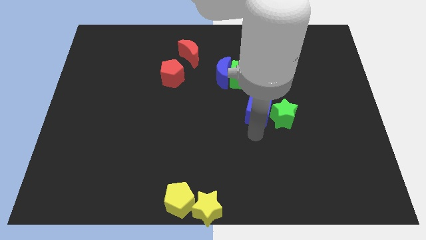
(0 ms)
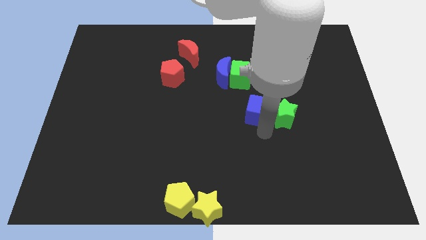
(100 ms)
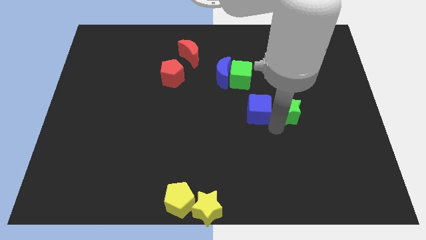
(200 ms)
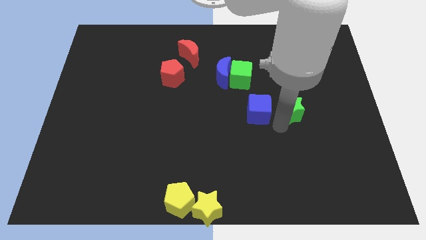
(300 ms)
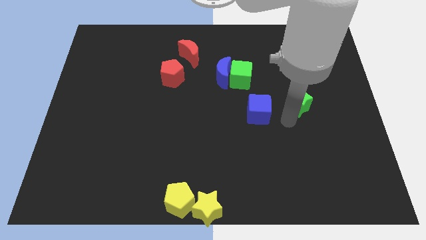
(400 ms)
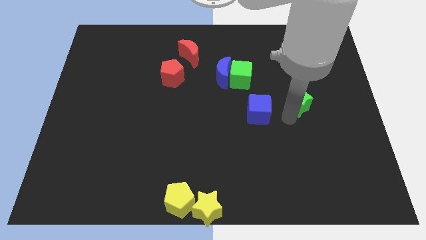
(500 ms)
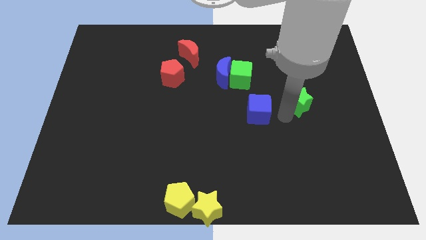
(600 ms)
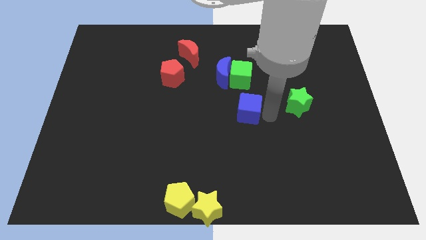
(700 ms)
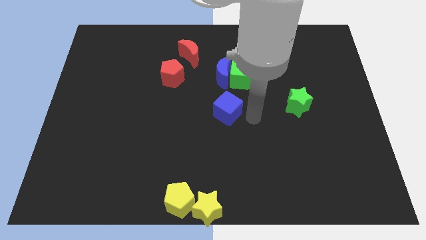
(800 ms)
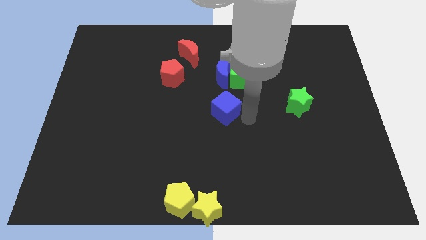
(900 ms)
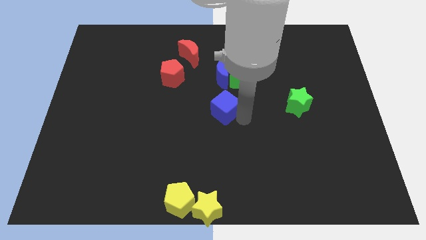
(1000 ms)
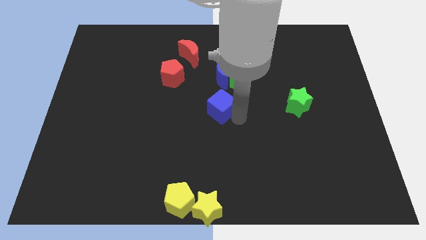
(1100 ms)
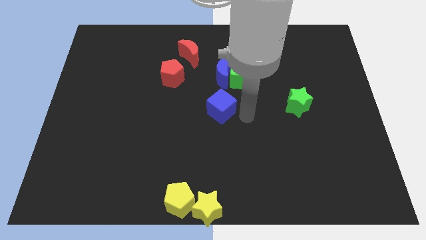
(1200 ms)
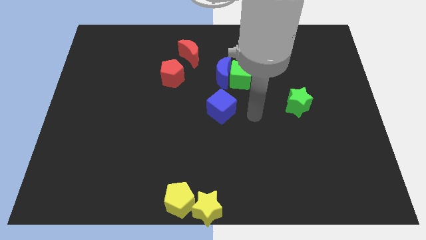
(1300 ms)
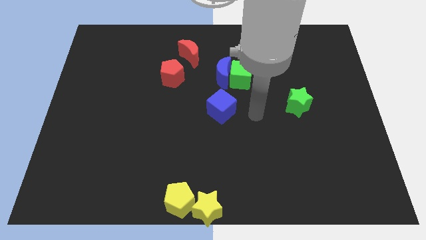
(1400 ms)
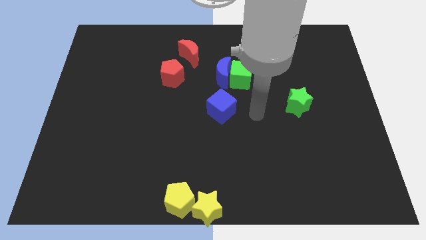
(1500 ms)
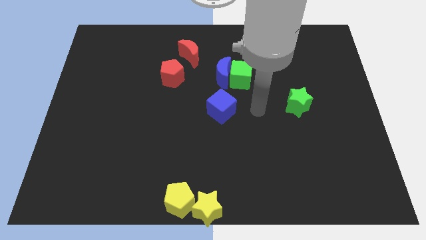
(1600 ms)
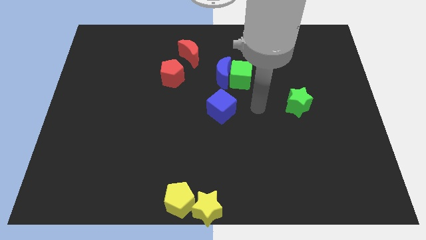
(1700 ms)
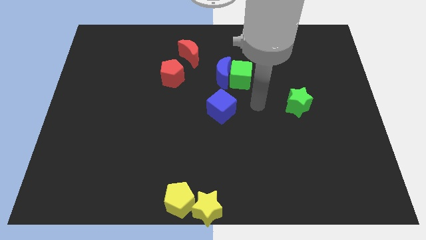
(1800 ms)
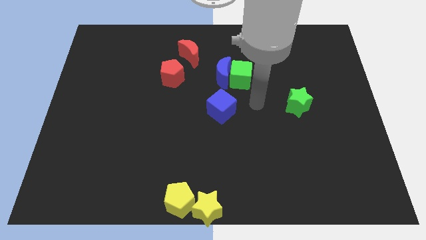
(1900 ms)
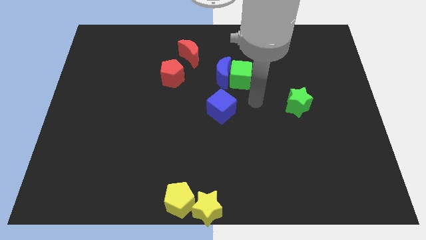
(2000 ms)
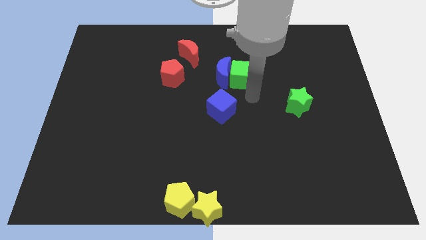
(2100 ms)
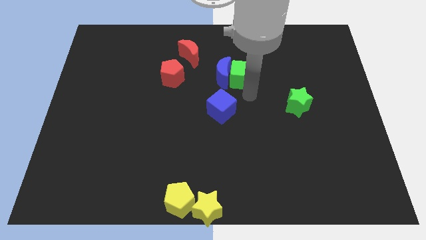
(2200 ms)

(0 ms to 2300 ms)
separate the green star and blue cube

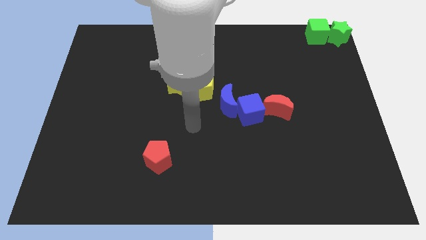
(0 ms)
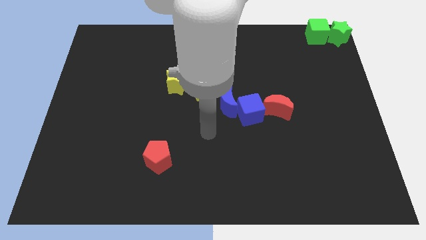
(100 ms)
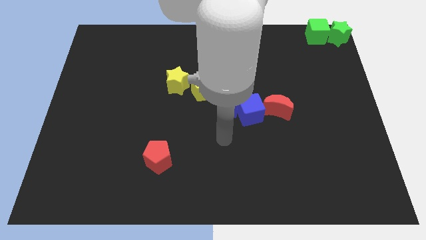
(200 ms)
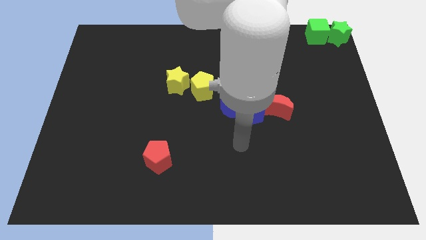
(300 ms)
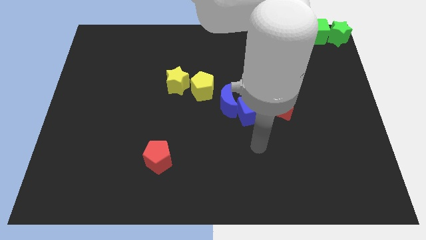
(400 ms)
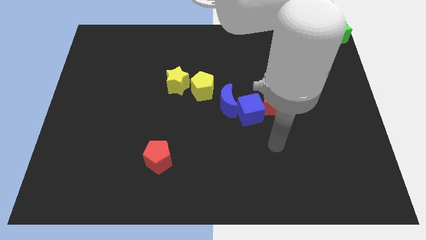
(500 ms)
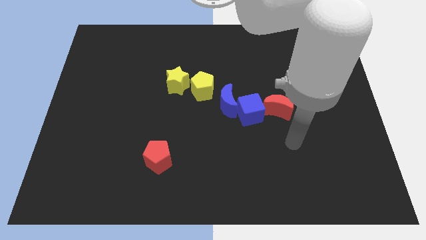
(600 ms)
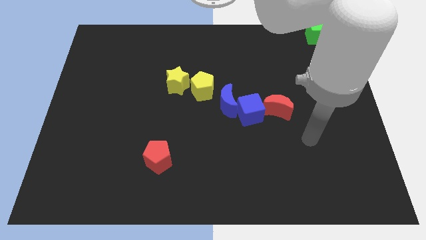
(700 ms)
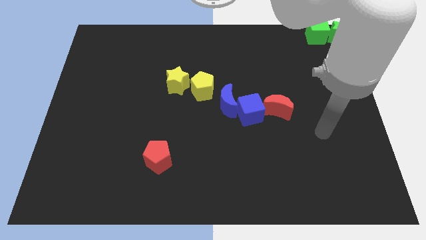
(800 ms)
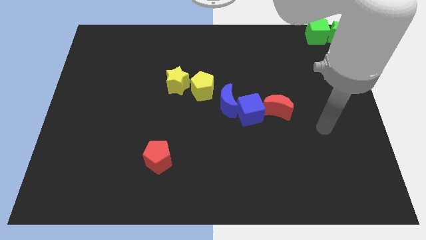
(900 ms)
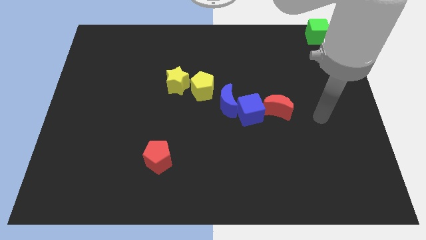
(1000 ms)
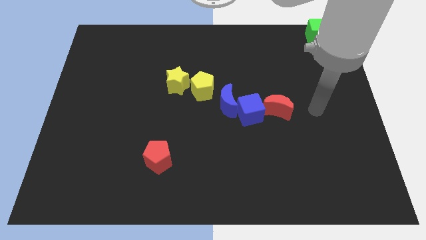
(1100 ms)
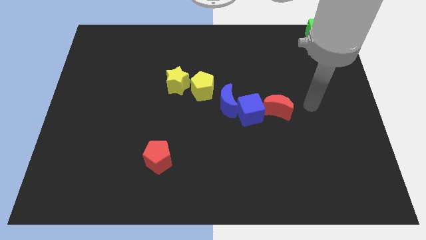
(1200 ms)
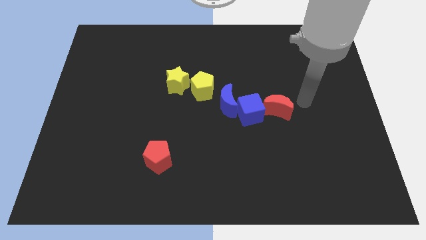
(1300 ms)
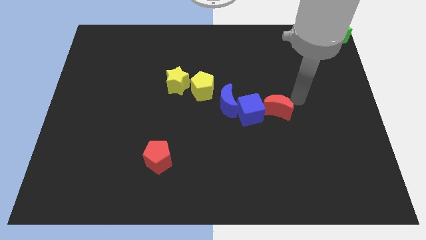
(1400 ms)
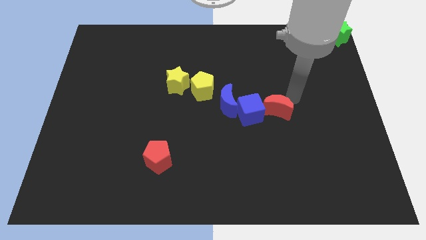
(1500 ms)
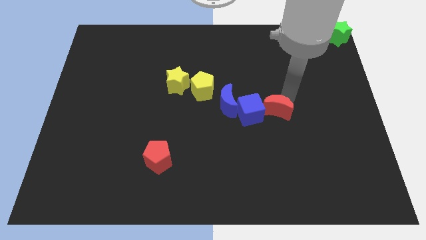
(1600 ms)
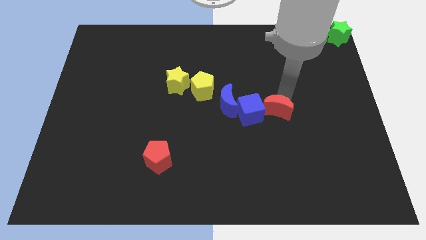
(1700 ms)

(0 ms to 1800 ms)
place your arm at the top side of the red moon

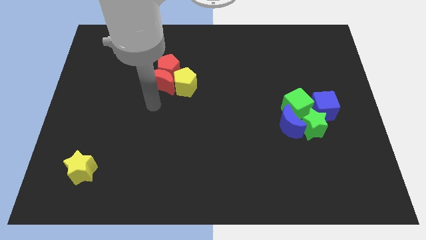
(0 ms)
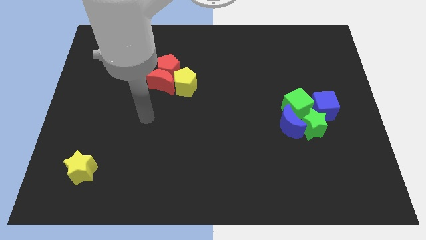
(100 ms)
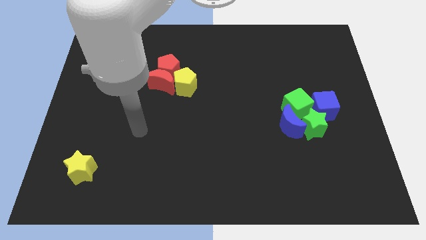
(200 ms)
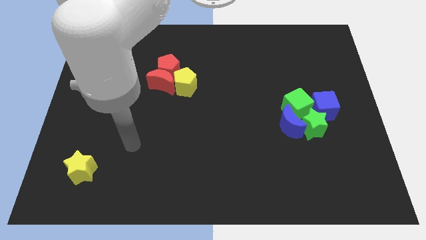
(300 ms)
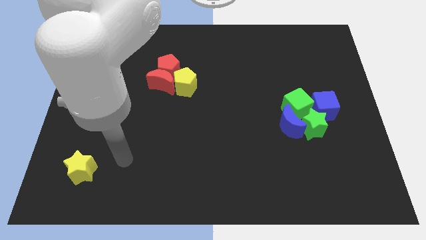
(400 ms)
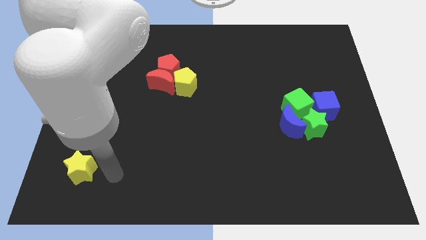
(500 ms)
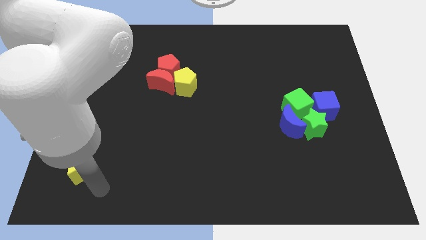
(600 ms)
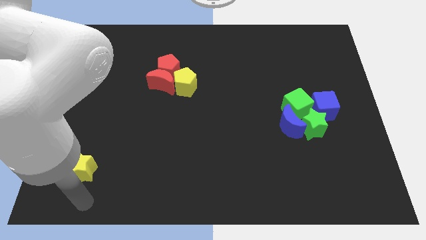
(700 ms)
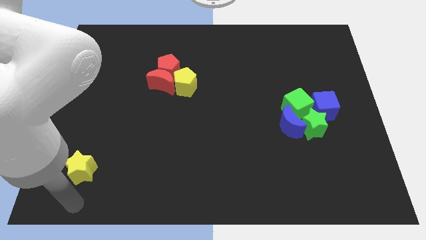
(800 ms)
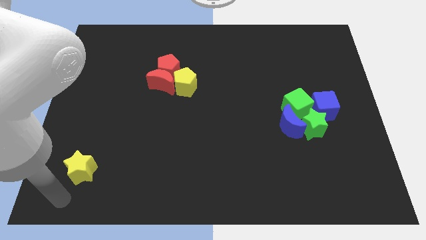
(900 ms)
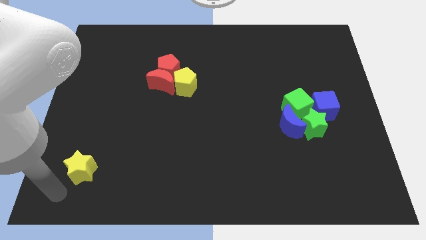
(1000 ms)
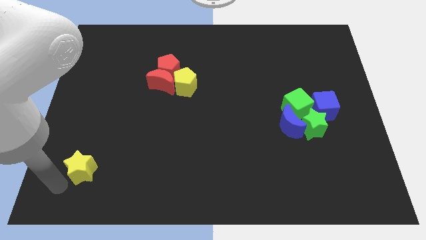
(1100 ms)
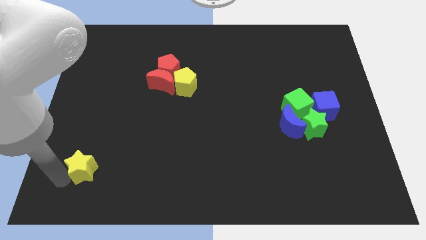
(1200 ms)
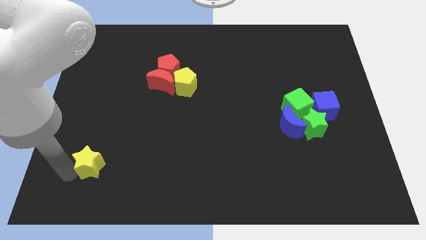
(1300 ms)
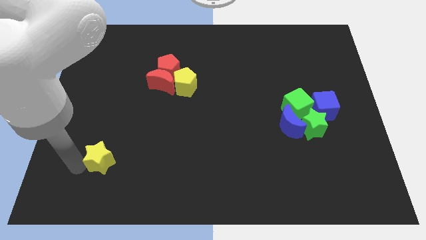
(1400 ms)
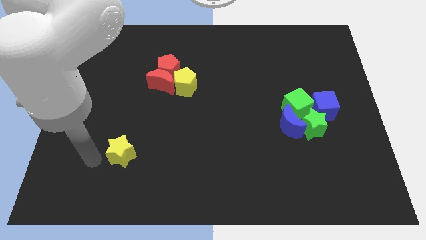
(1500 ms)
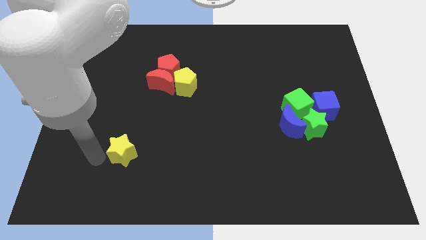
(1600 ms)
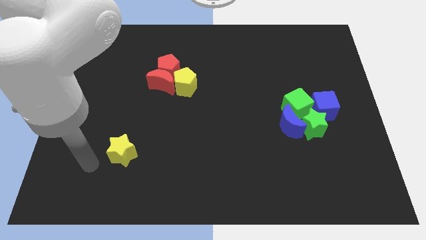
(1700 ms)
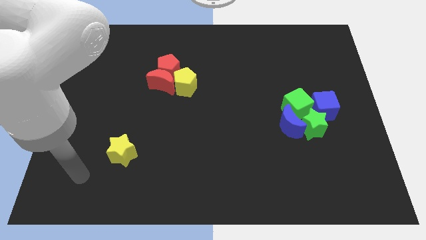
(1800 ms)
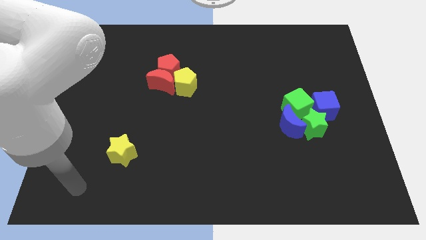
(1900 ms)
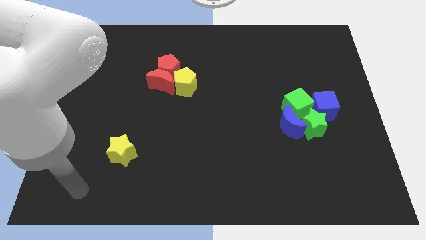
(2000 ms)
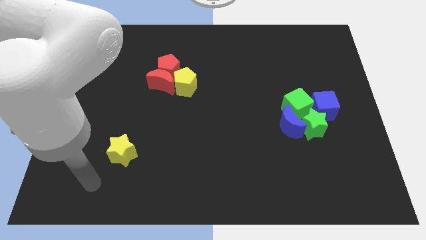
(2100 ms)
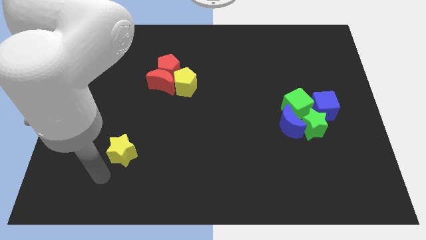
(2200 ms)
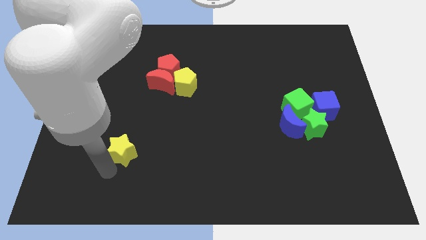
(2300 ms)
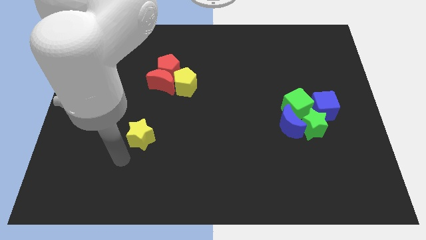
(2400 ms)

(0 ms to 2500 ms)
push the yellow star towards the top side of the board

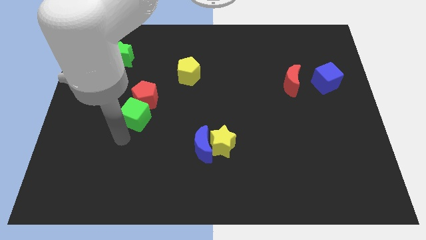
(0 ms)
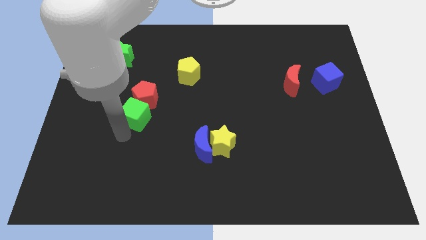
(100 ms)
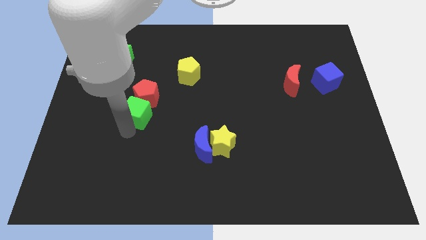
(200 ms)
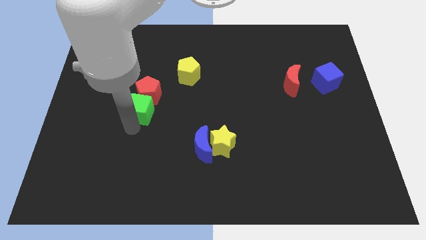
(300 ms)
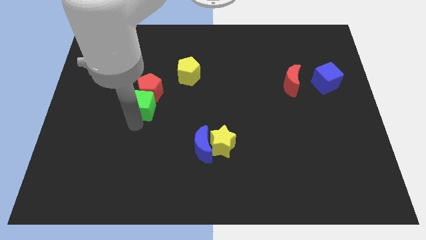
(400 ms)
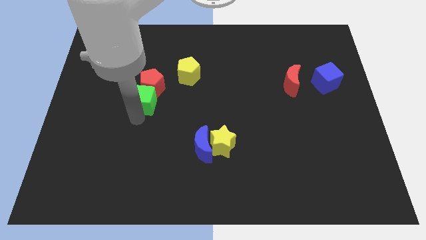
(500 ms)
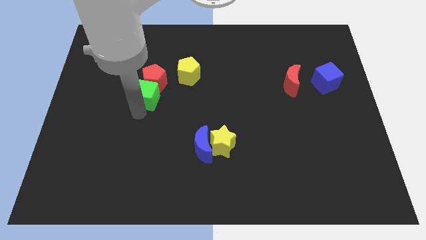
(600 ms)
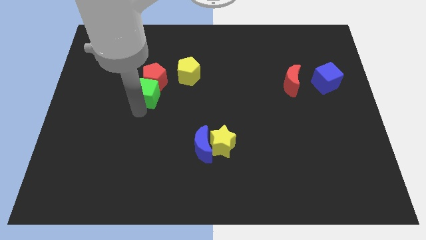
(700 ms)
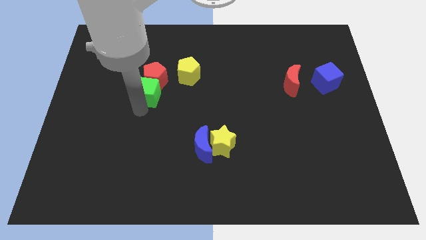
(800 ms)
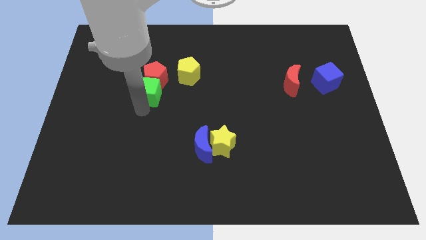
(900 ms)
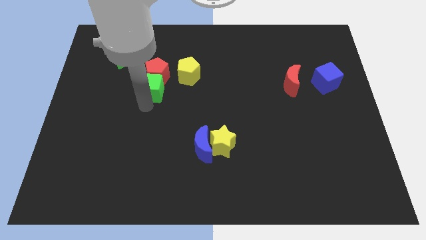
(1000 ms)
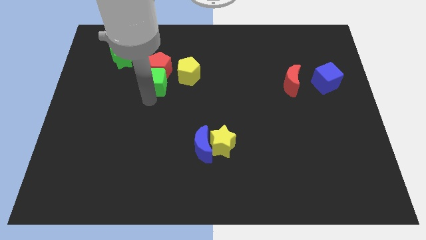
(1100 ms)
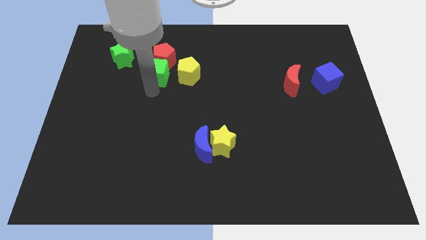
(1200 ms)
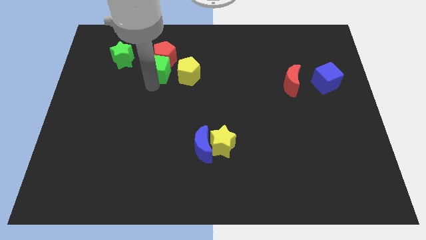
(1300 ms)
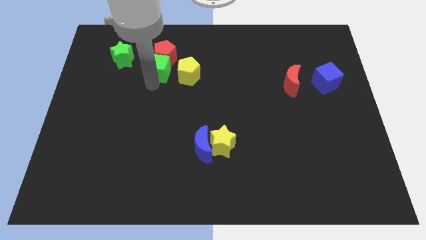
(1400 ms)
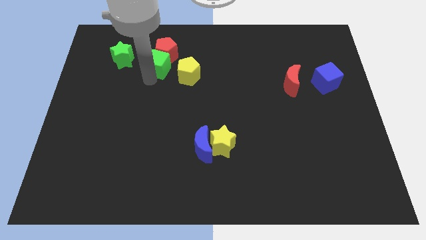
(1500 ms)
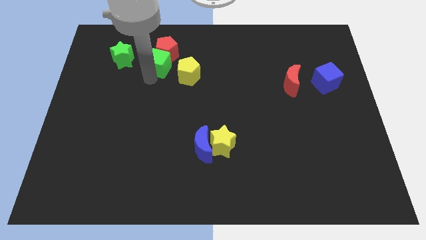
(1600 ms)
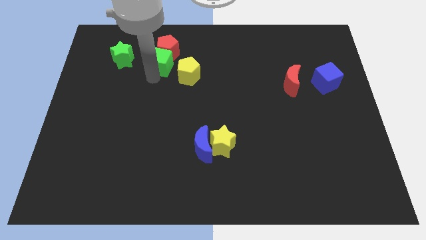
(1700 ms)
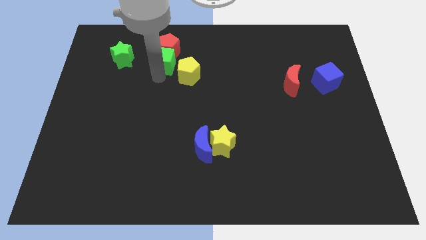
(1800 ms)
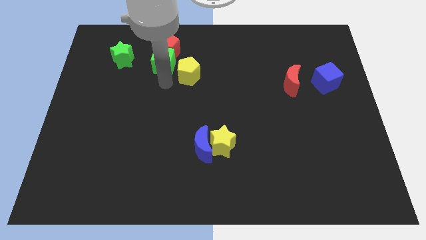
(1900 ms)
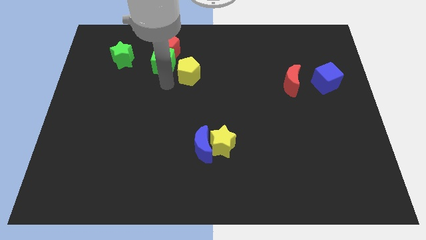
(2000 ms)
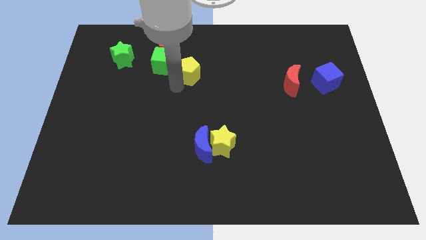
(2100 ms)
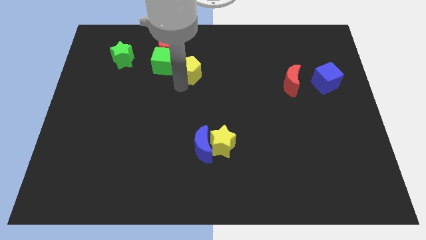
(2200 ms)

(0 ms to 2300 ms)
push the green cube to the left of the yellow pentagon

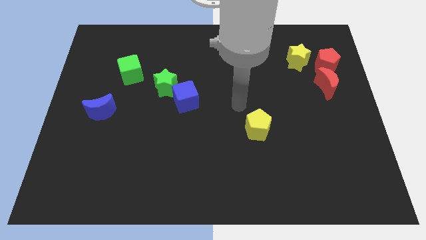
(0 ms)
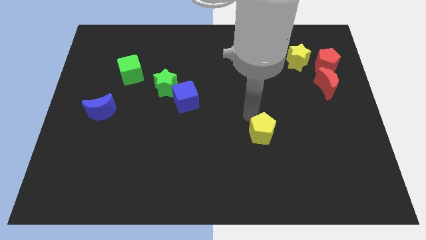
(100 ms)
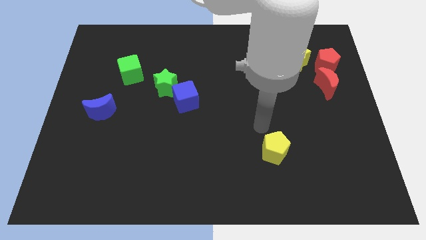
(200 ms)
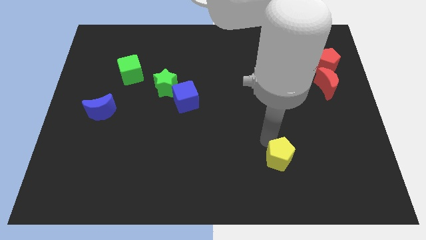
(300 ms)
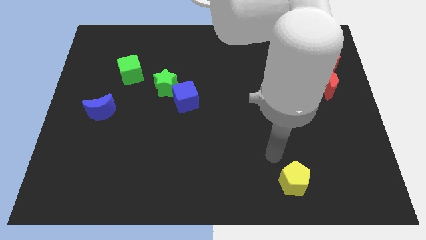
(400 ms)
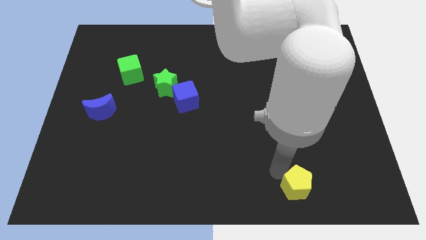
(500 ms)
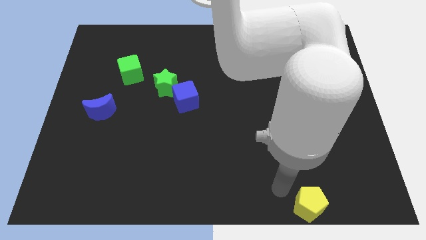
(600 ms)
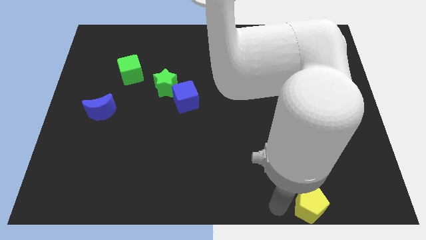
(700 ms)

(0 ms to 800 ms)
push the yellow pentagon diagonally towards the bottom
